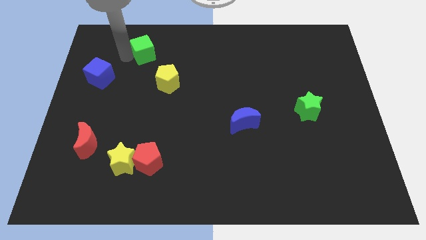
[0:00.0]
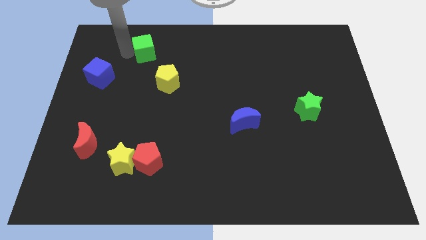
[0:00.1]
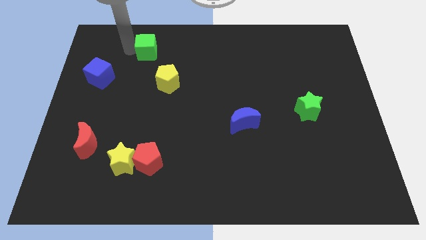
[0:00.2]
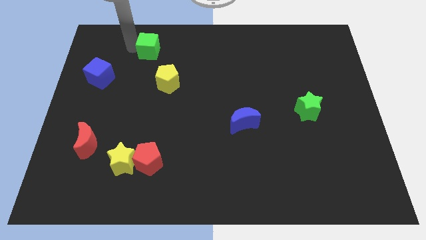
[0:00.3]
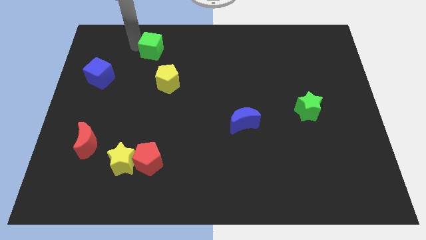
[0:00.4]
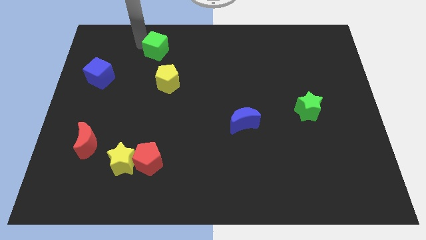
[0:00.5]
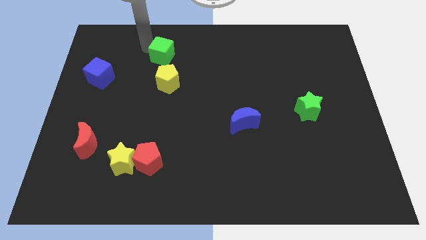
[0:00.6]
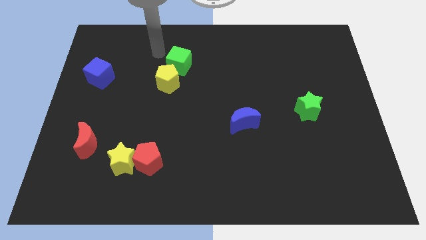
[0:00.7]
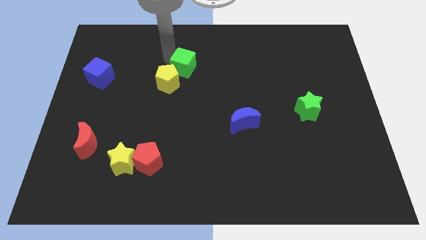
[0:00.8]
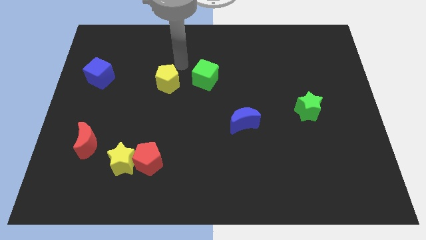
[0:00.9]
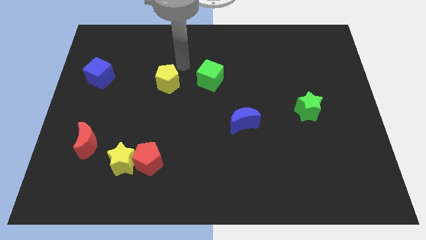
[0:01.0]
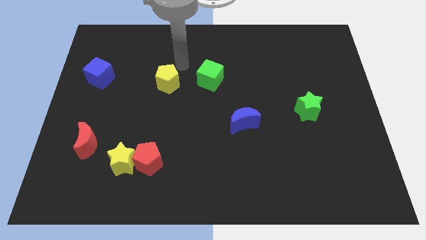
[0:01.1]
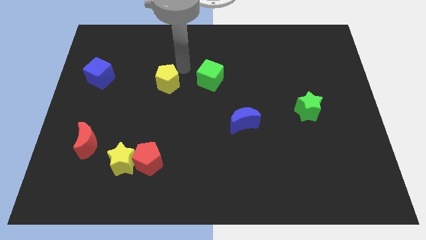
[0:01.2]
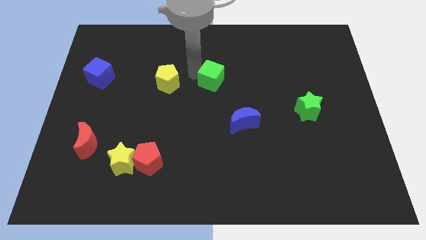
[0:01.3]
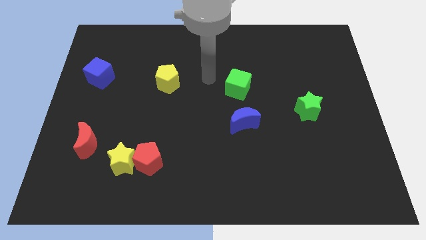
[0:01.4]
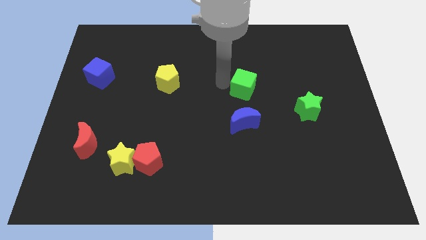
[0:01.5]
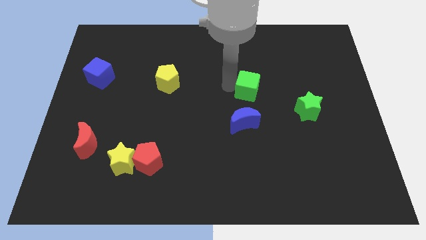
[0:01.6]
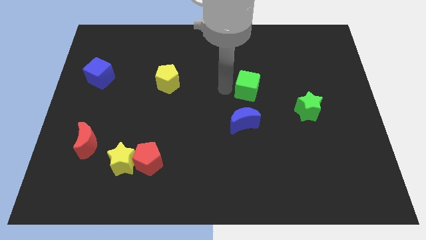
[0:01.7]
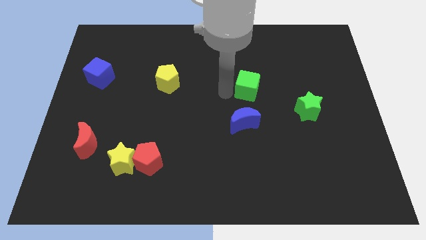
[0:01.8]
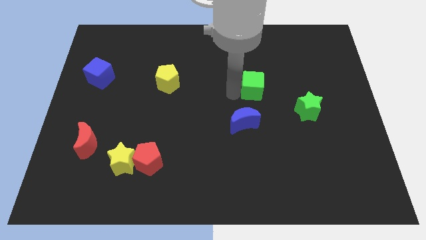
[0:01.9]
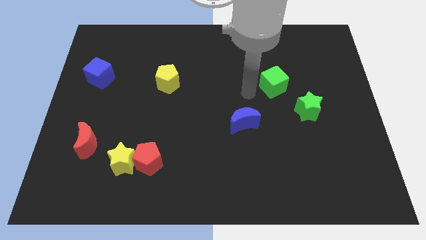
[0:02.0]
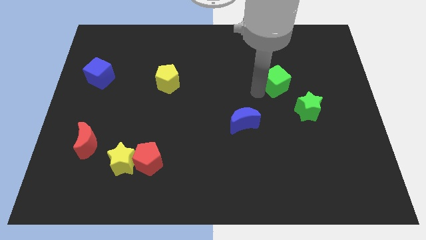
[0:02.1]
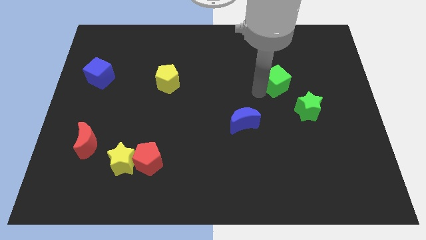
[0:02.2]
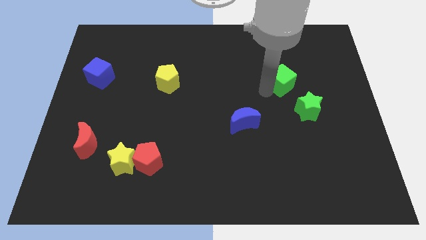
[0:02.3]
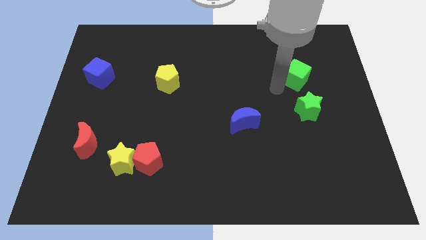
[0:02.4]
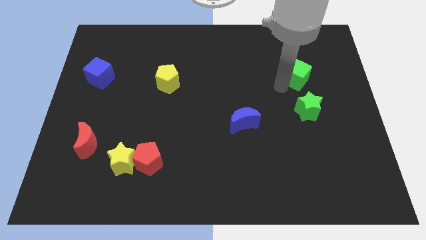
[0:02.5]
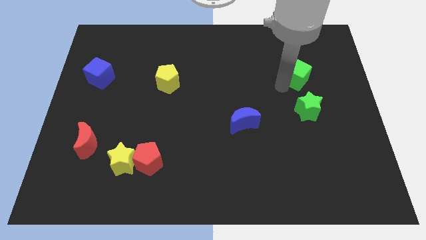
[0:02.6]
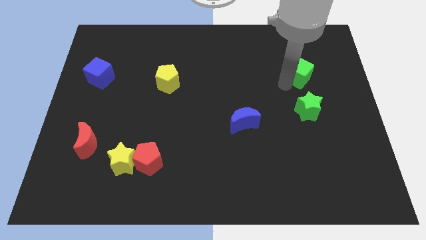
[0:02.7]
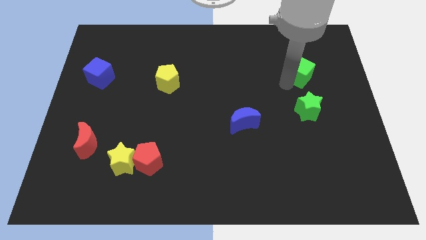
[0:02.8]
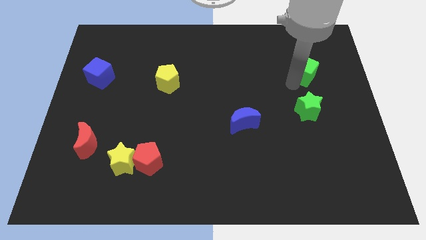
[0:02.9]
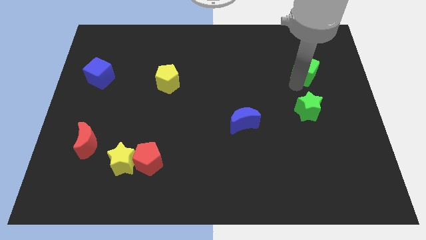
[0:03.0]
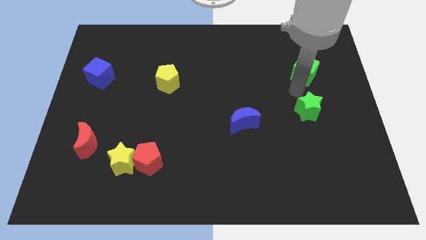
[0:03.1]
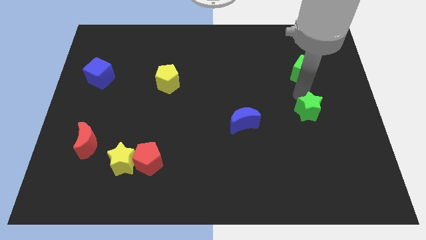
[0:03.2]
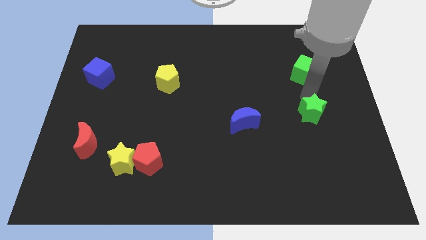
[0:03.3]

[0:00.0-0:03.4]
push the green cube to the top of the green star

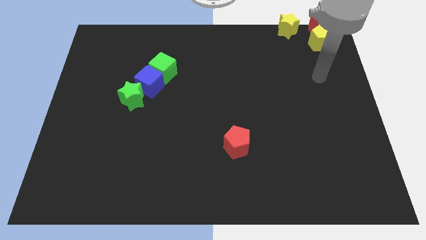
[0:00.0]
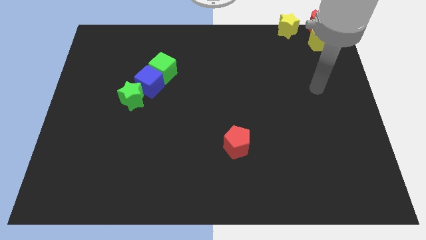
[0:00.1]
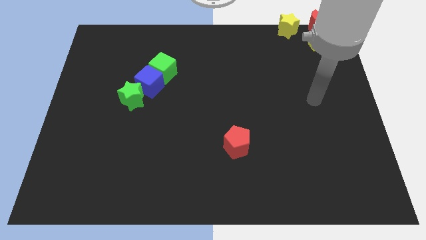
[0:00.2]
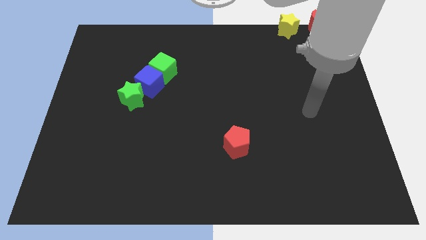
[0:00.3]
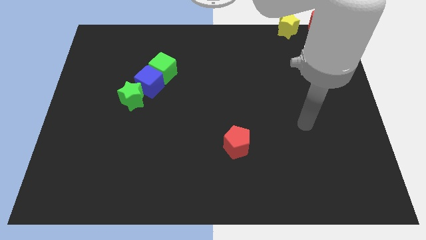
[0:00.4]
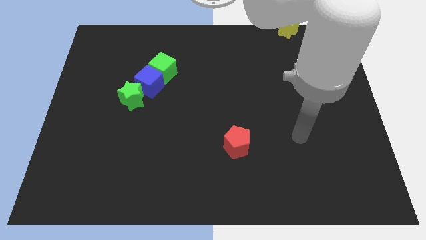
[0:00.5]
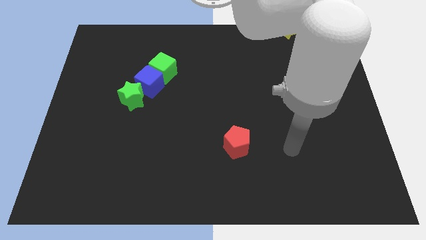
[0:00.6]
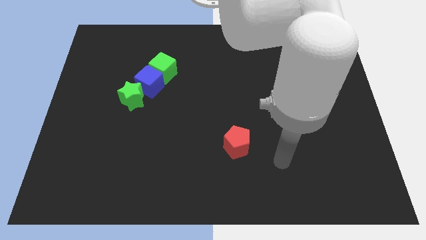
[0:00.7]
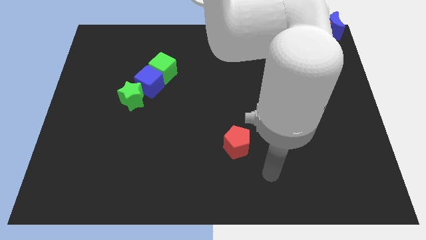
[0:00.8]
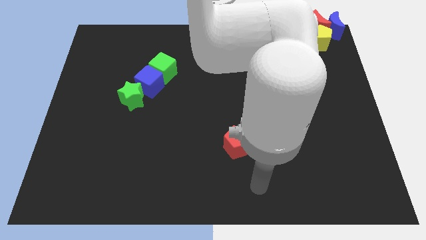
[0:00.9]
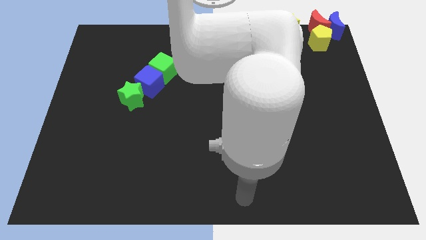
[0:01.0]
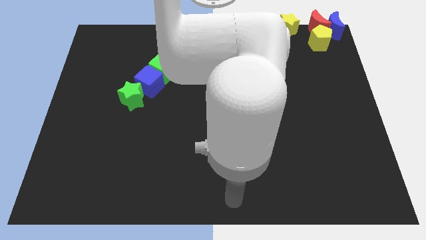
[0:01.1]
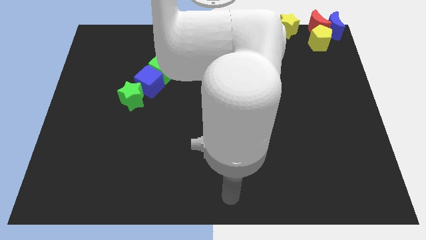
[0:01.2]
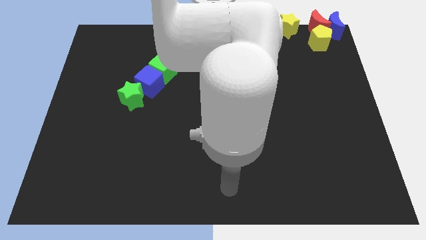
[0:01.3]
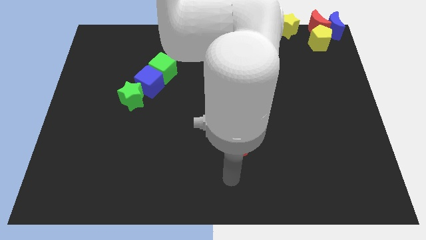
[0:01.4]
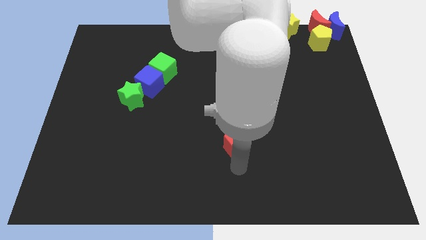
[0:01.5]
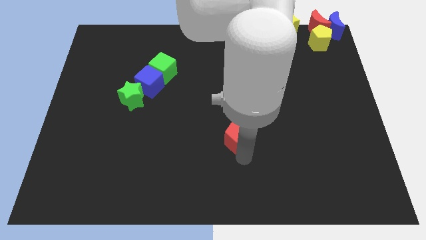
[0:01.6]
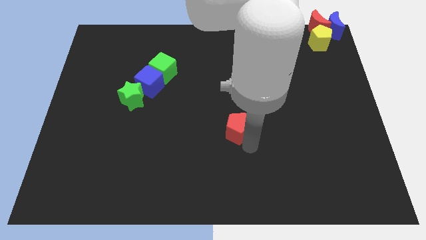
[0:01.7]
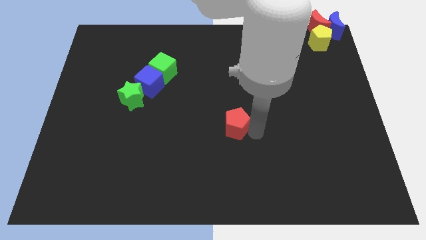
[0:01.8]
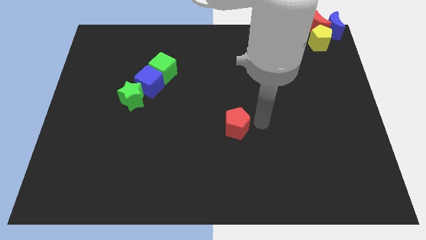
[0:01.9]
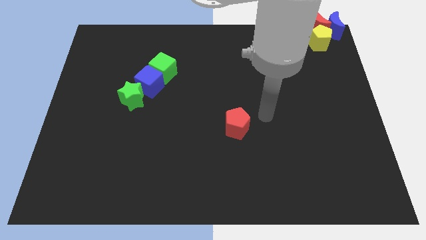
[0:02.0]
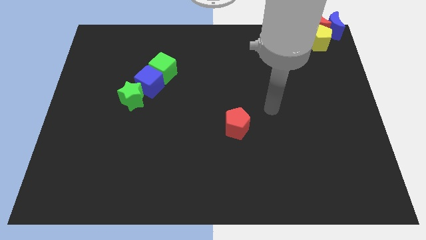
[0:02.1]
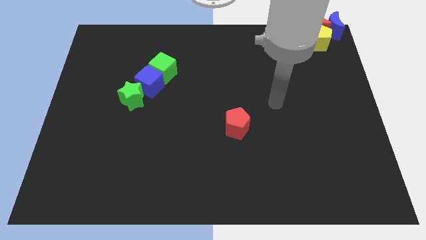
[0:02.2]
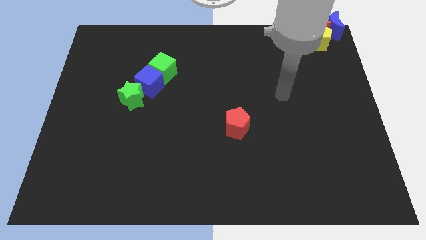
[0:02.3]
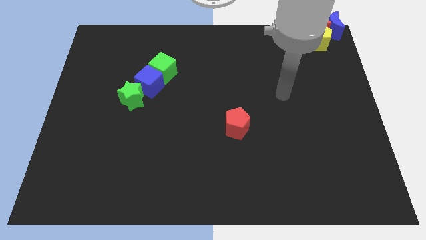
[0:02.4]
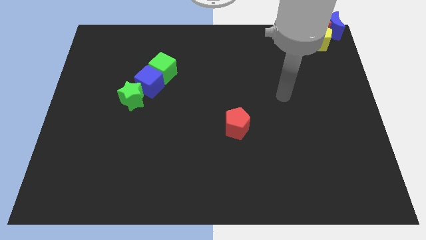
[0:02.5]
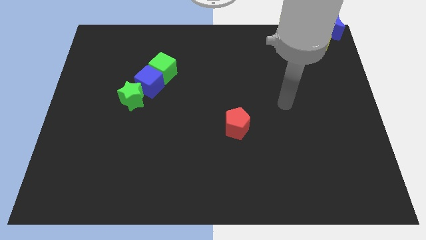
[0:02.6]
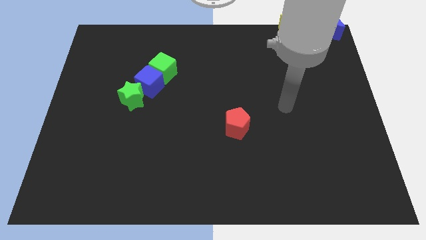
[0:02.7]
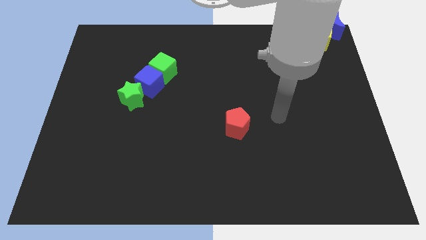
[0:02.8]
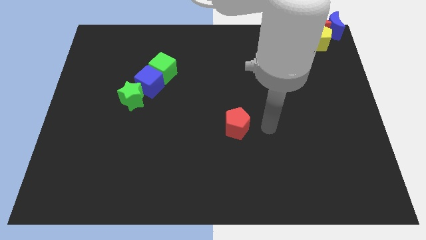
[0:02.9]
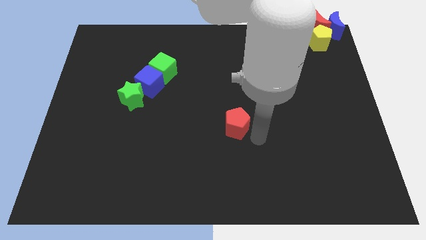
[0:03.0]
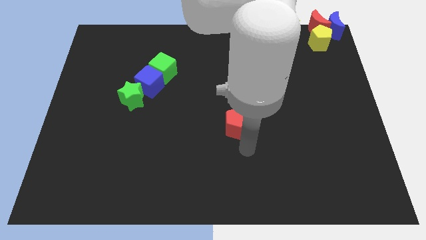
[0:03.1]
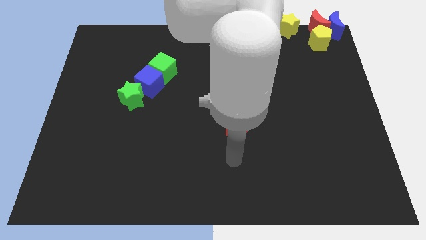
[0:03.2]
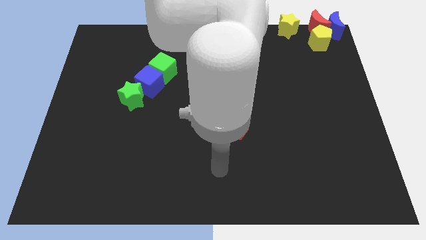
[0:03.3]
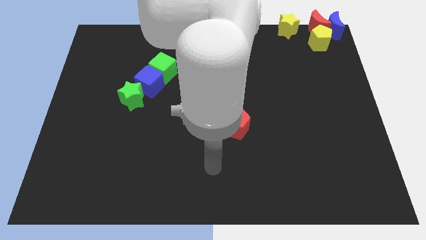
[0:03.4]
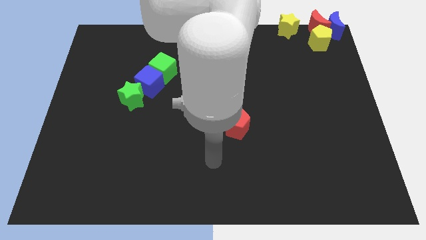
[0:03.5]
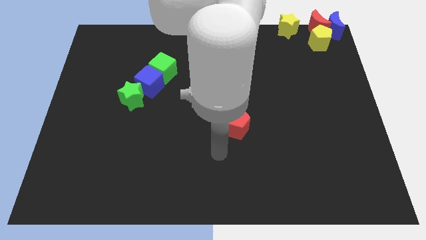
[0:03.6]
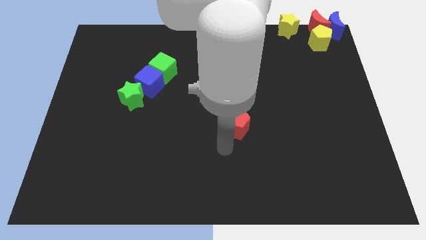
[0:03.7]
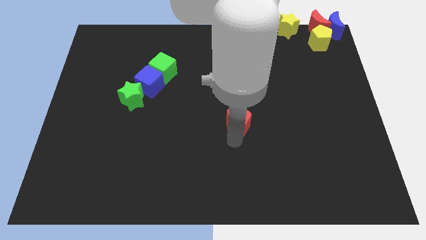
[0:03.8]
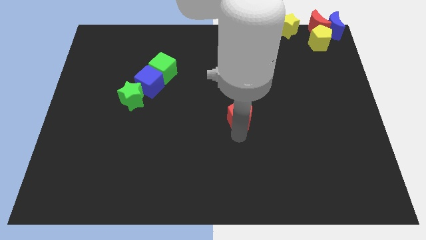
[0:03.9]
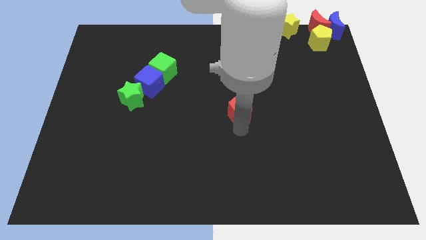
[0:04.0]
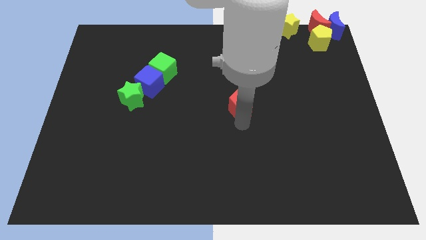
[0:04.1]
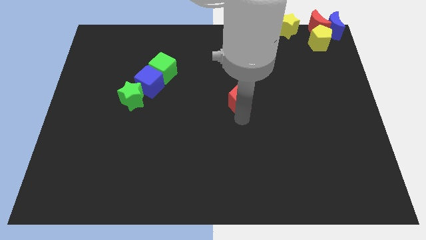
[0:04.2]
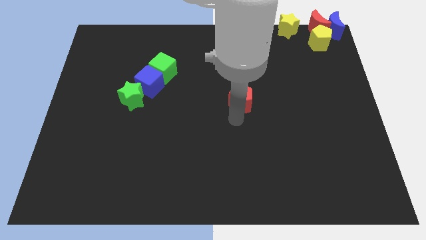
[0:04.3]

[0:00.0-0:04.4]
push the red pentagon upwards

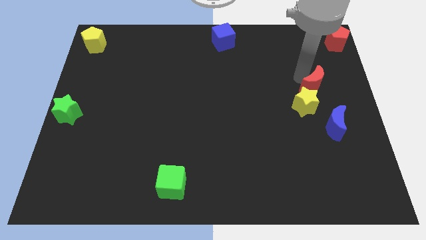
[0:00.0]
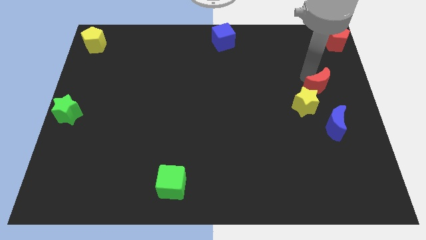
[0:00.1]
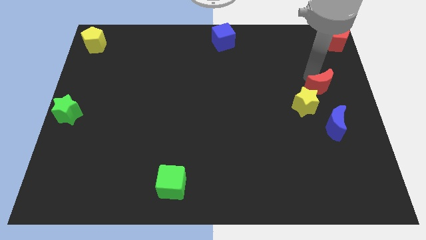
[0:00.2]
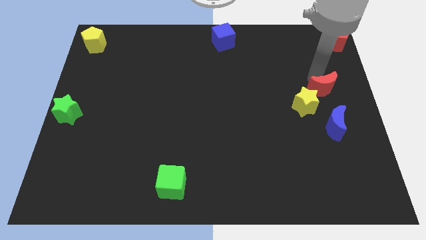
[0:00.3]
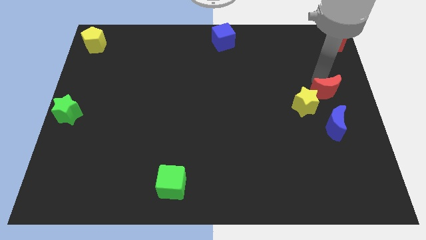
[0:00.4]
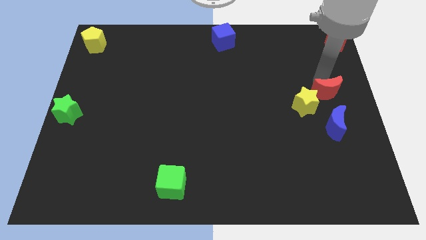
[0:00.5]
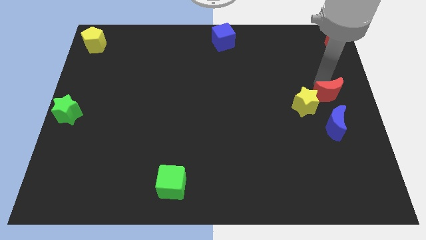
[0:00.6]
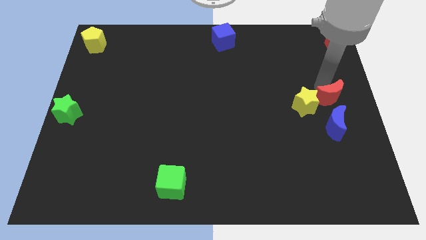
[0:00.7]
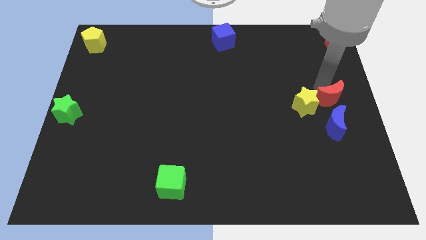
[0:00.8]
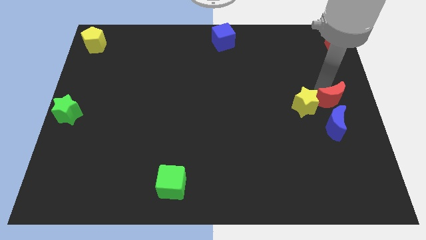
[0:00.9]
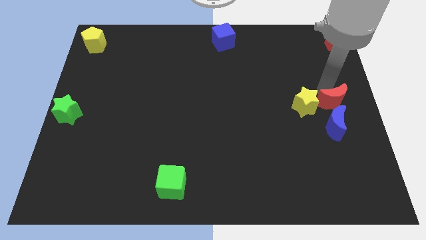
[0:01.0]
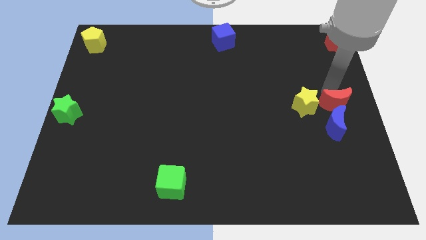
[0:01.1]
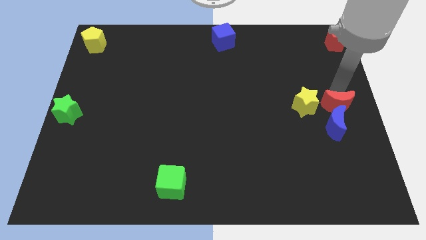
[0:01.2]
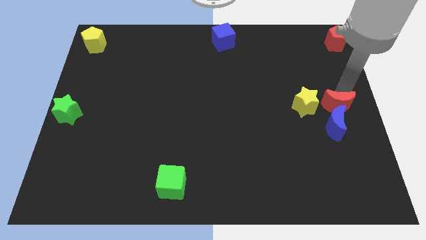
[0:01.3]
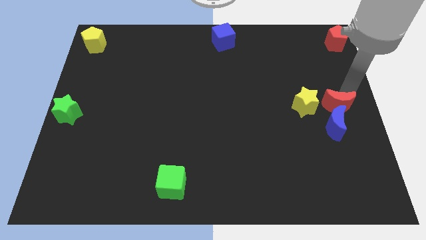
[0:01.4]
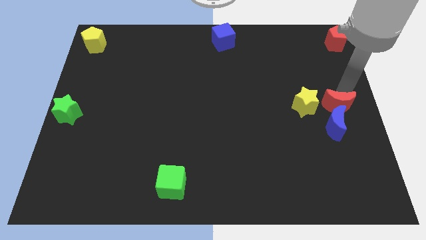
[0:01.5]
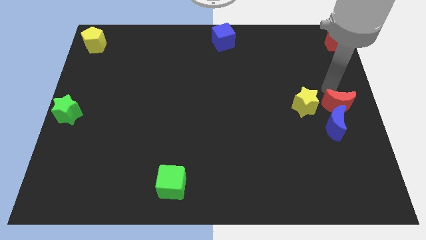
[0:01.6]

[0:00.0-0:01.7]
move the red moon above the blue cube
